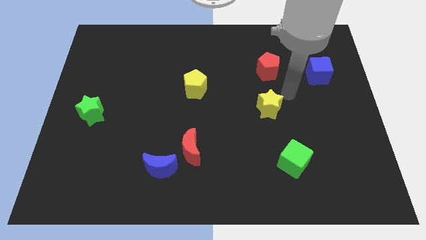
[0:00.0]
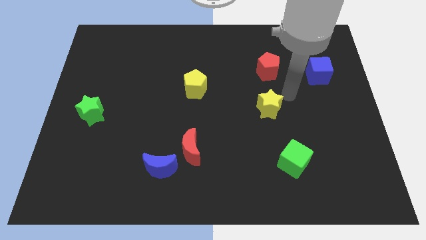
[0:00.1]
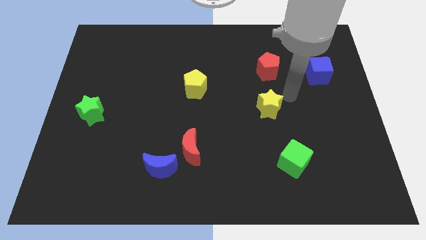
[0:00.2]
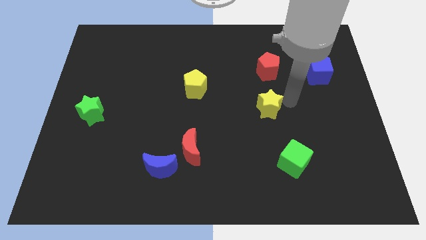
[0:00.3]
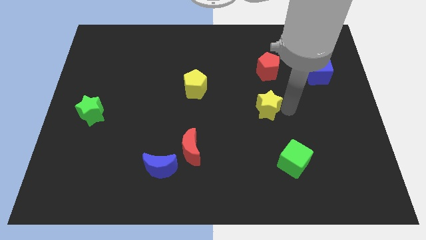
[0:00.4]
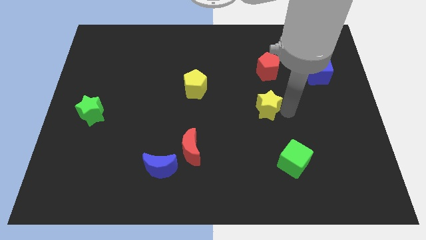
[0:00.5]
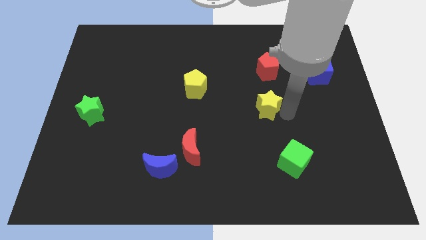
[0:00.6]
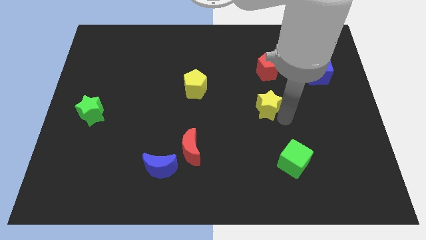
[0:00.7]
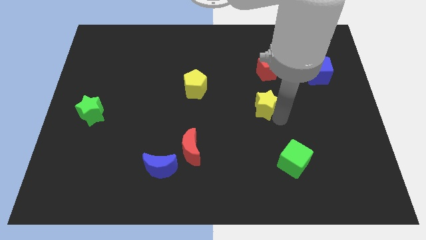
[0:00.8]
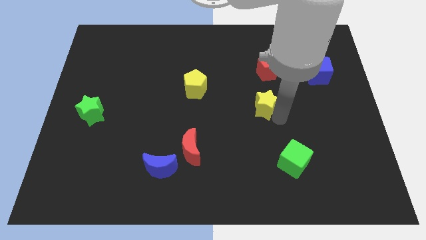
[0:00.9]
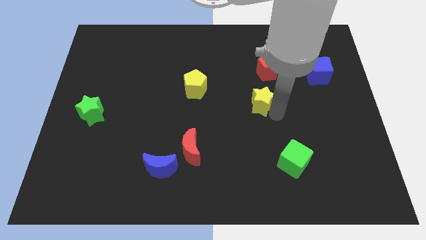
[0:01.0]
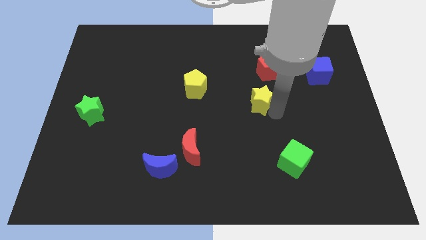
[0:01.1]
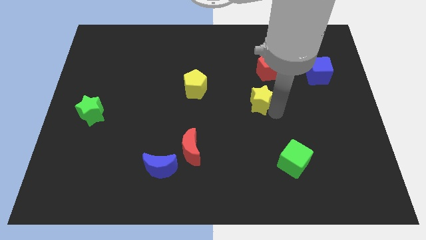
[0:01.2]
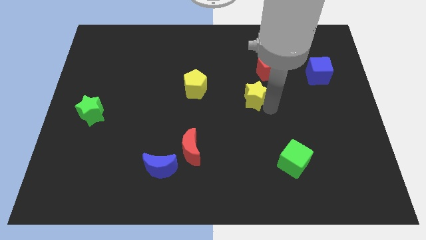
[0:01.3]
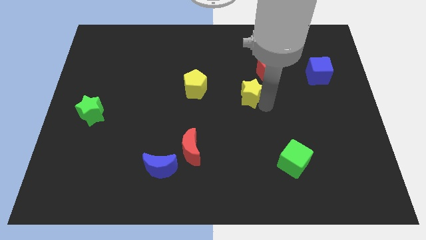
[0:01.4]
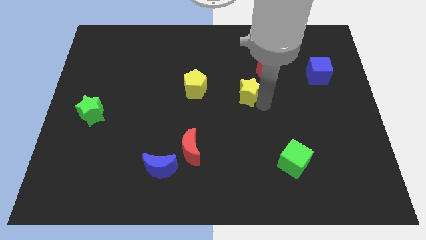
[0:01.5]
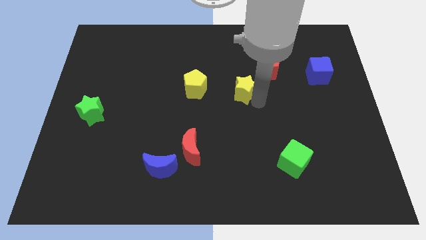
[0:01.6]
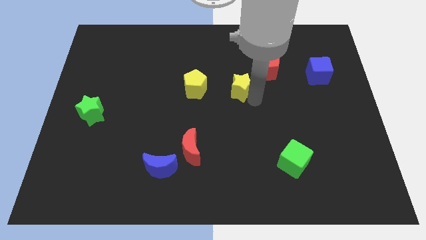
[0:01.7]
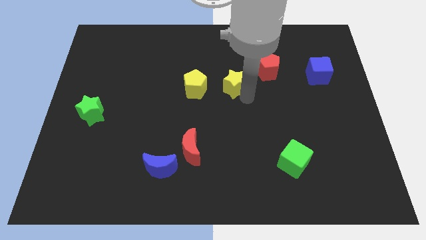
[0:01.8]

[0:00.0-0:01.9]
place yellow star to the right of yellow pentagon

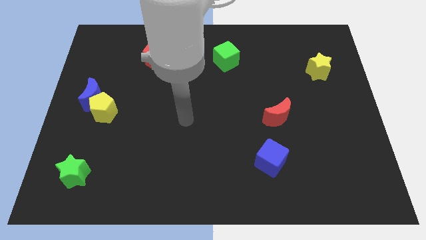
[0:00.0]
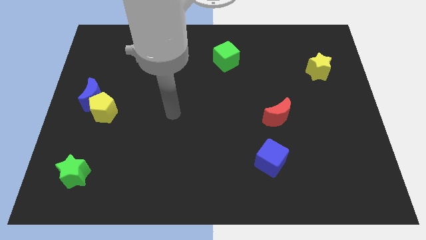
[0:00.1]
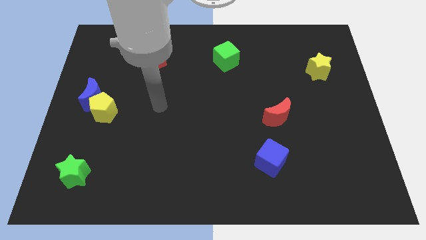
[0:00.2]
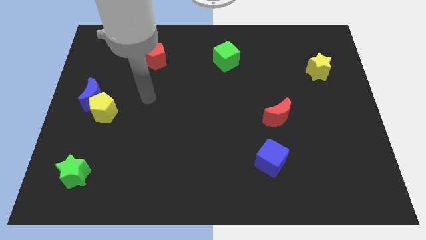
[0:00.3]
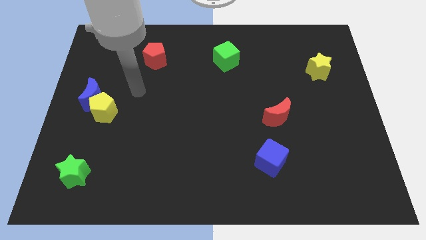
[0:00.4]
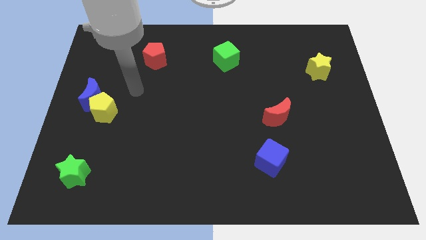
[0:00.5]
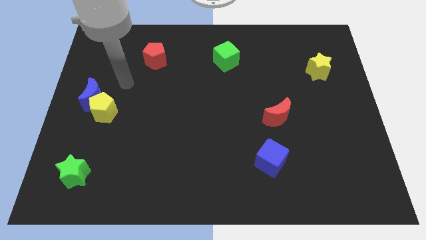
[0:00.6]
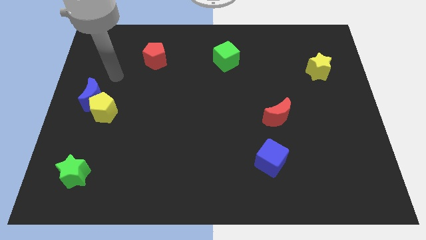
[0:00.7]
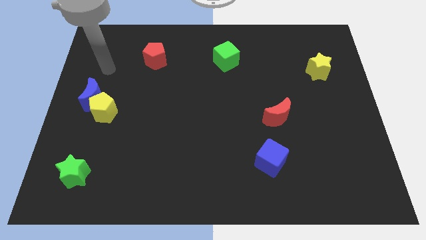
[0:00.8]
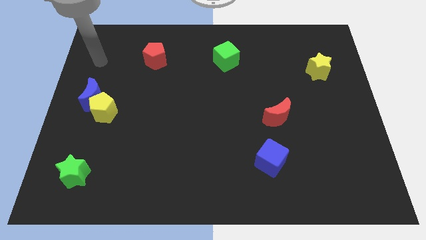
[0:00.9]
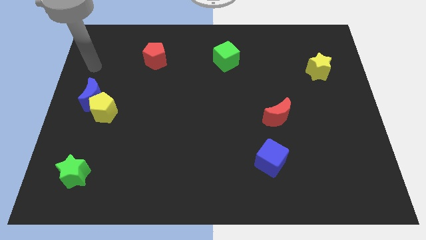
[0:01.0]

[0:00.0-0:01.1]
place arm on the top of blue moon

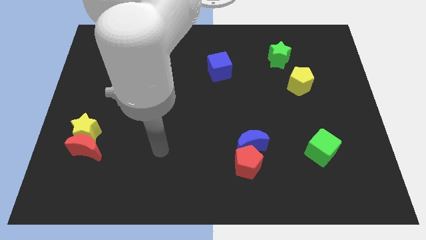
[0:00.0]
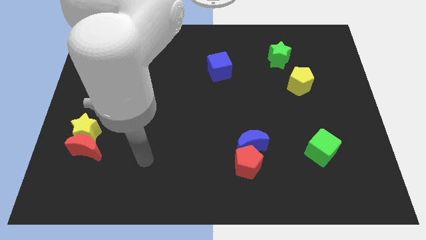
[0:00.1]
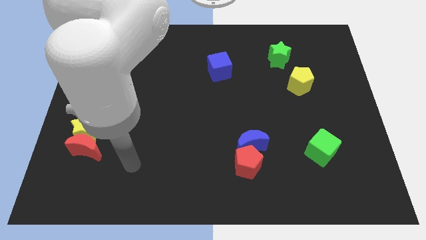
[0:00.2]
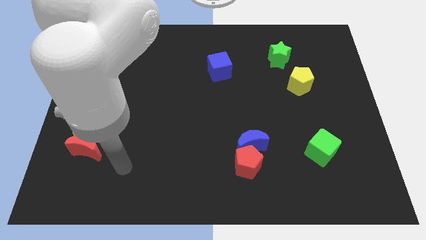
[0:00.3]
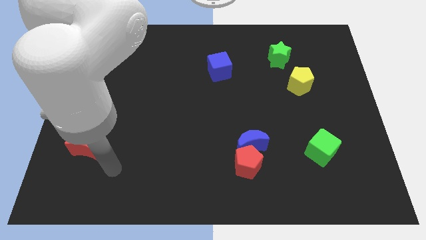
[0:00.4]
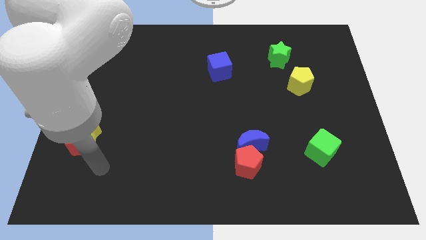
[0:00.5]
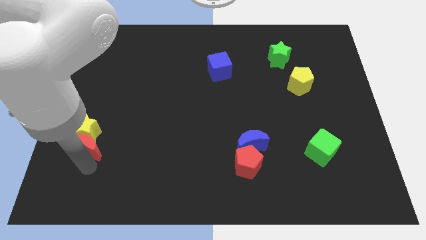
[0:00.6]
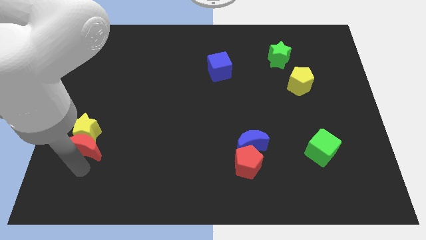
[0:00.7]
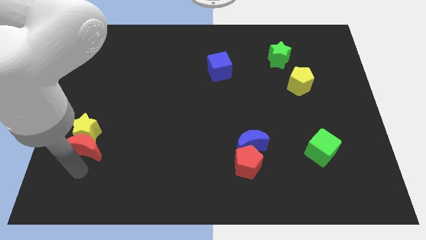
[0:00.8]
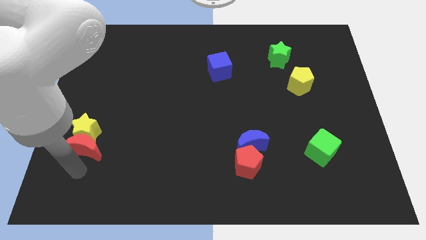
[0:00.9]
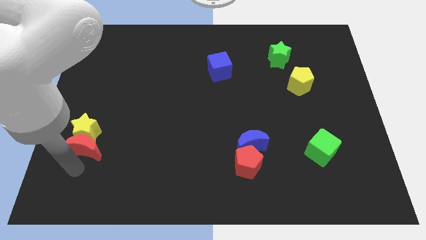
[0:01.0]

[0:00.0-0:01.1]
slide your arm below the red moon

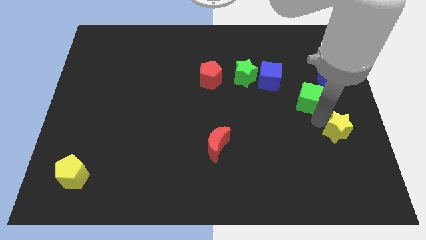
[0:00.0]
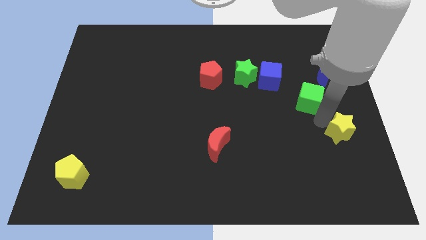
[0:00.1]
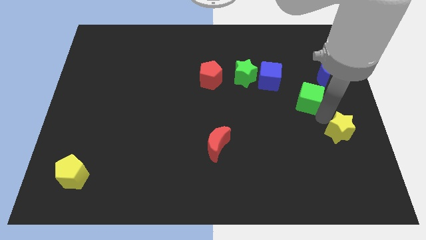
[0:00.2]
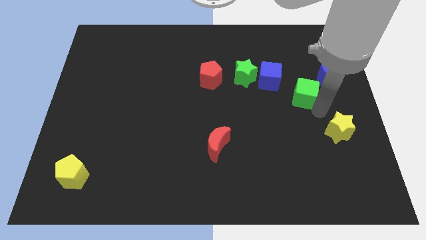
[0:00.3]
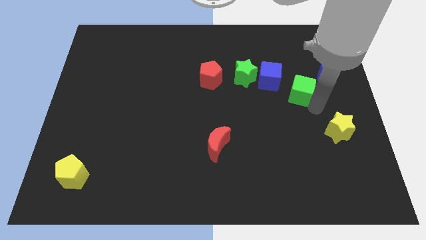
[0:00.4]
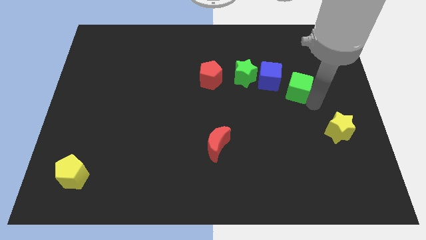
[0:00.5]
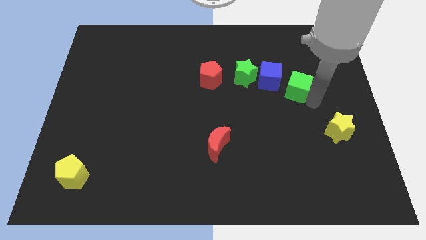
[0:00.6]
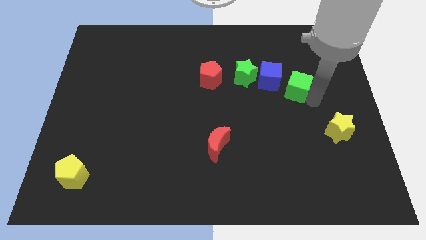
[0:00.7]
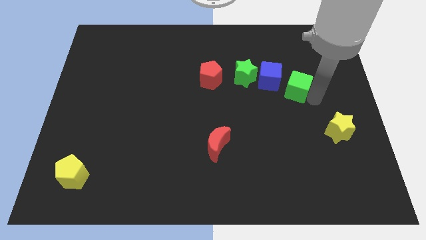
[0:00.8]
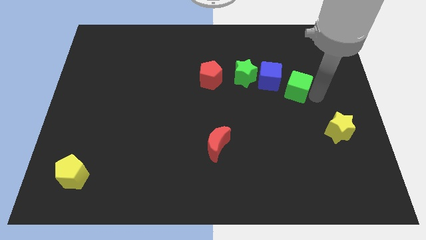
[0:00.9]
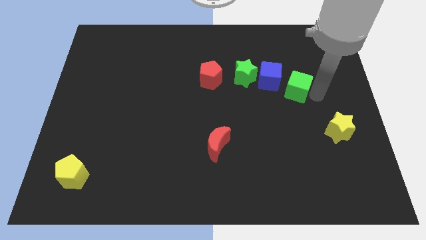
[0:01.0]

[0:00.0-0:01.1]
move the green cube close to the blue cube

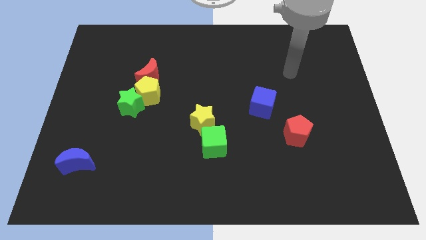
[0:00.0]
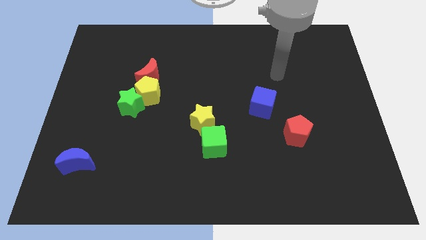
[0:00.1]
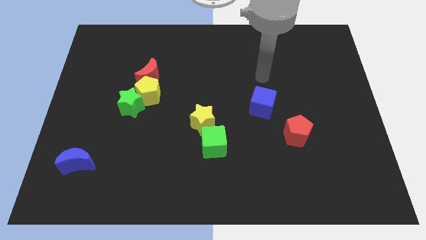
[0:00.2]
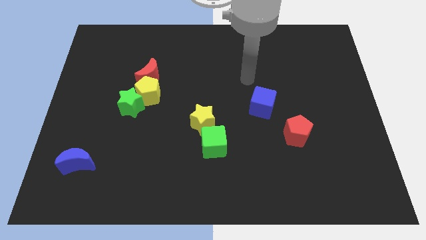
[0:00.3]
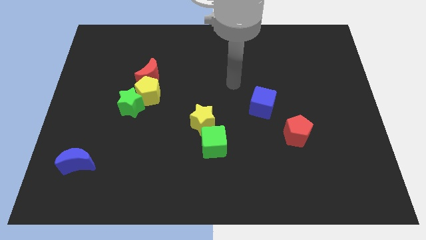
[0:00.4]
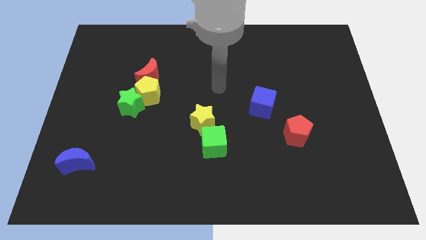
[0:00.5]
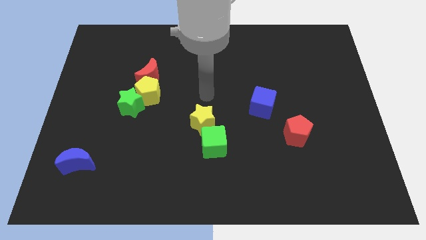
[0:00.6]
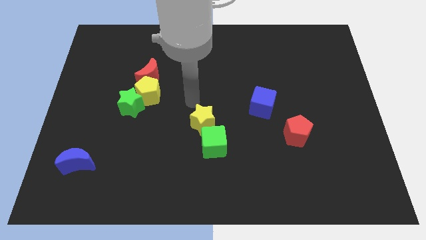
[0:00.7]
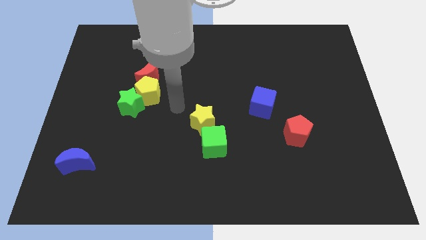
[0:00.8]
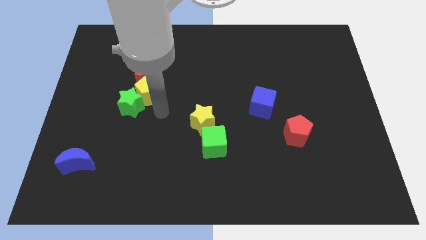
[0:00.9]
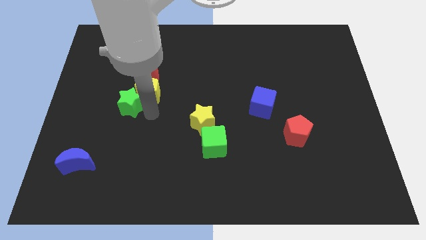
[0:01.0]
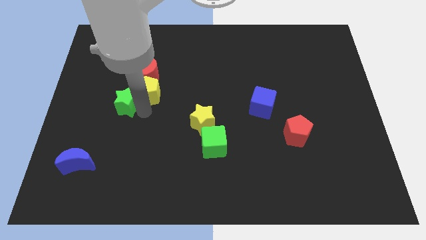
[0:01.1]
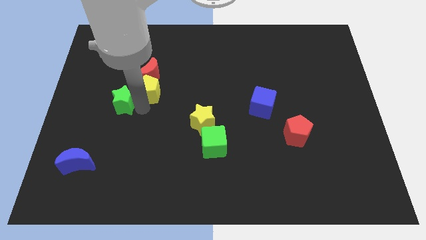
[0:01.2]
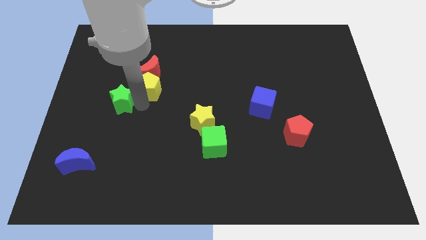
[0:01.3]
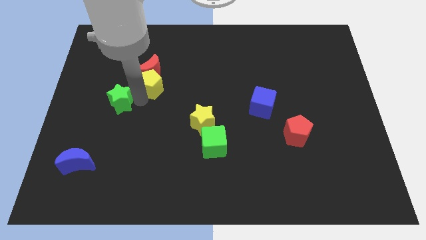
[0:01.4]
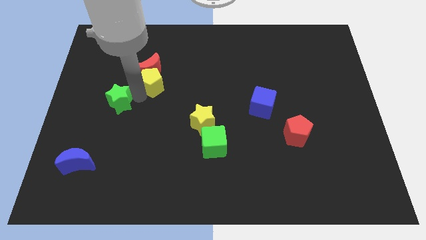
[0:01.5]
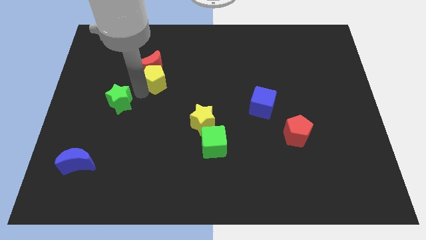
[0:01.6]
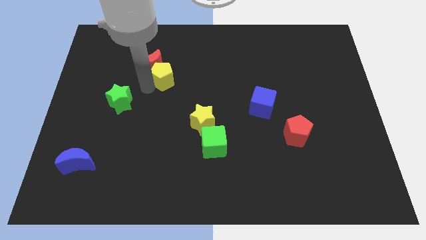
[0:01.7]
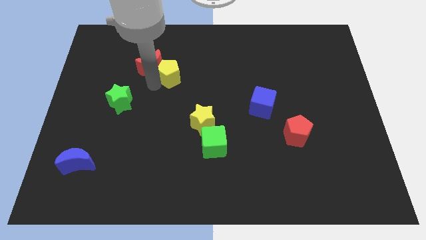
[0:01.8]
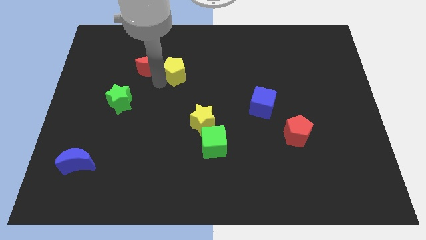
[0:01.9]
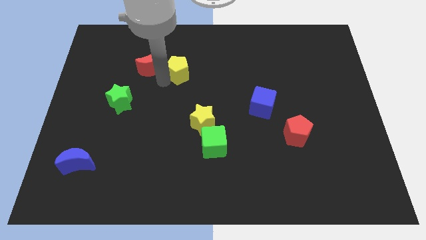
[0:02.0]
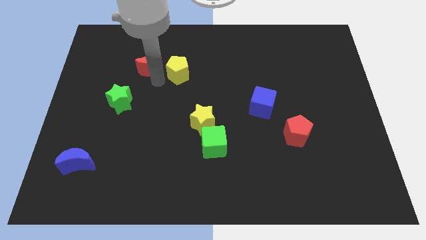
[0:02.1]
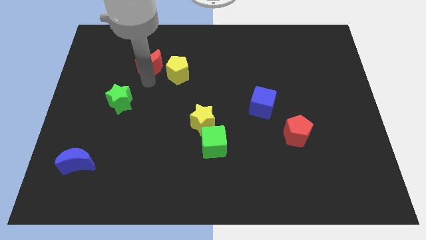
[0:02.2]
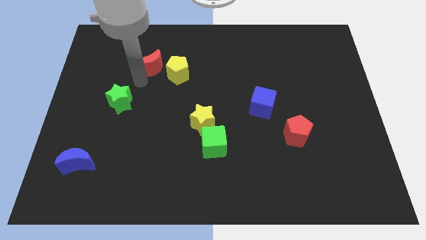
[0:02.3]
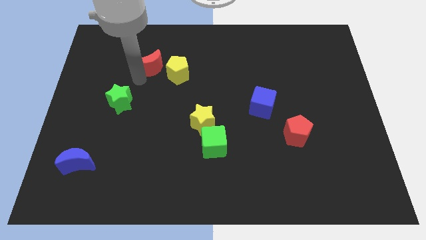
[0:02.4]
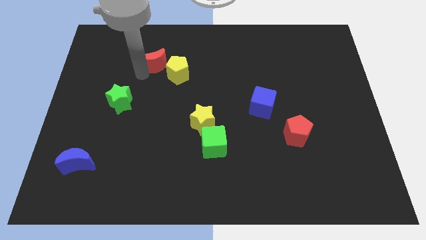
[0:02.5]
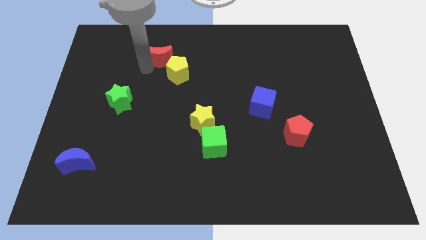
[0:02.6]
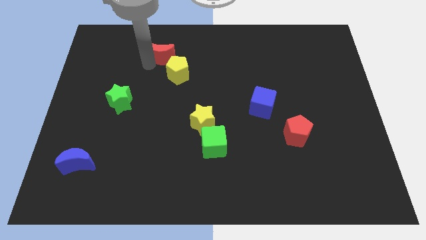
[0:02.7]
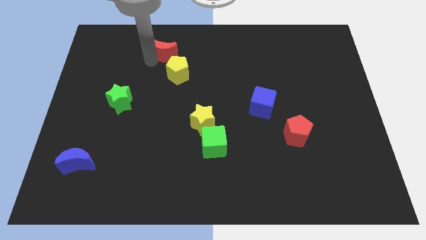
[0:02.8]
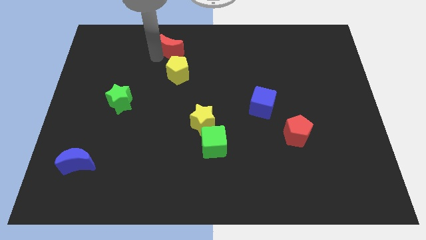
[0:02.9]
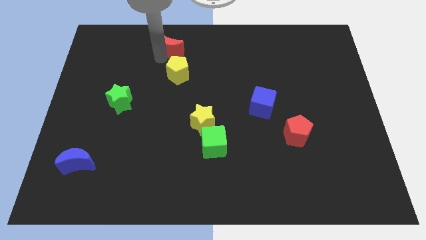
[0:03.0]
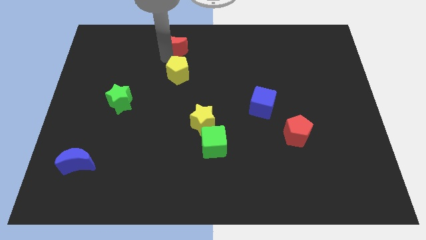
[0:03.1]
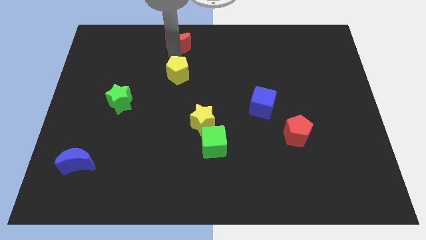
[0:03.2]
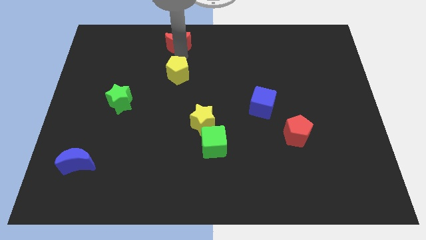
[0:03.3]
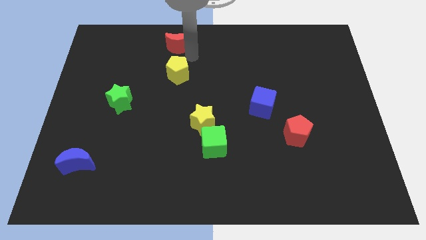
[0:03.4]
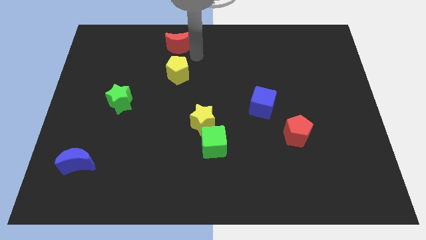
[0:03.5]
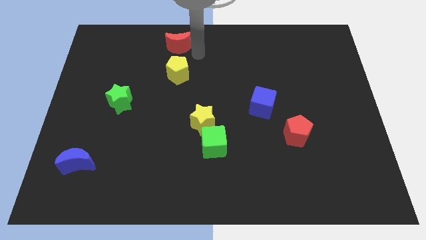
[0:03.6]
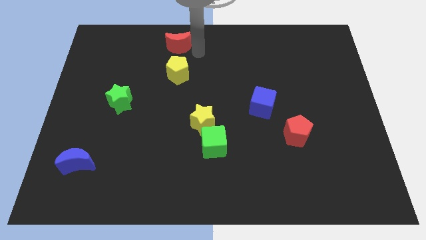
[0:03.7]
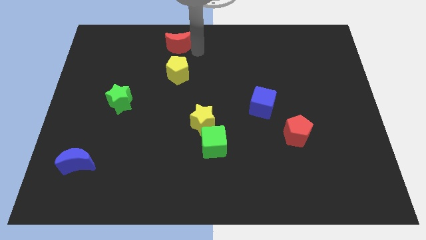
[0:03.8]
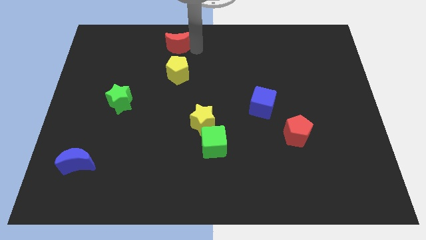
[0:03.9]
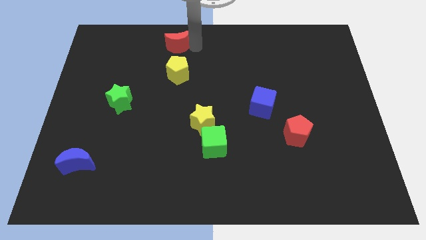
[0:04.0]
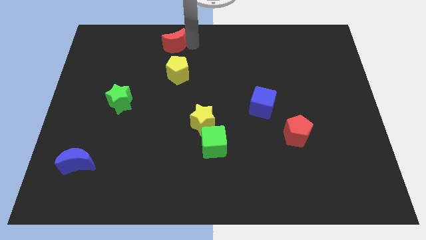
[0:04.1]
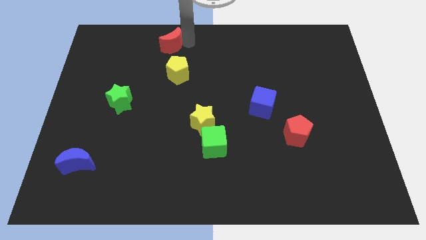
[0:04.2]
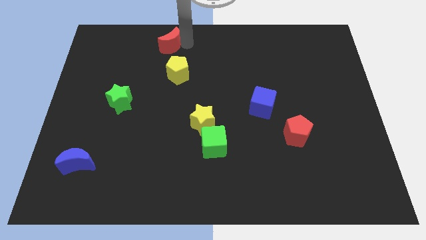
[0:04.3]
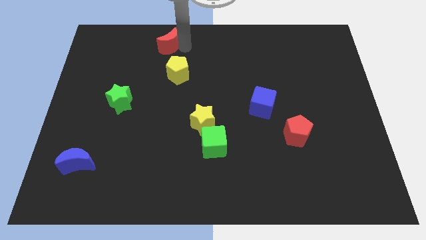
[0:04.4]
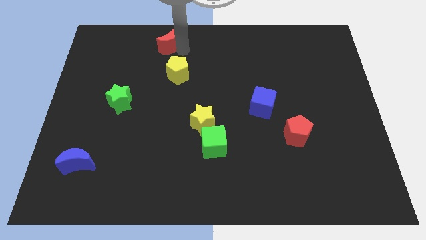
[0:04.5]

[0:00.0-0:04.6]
separate the green star yellow pentagon and the red crescent
